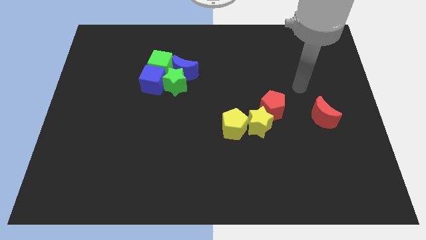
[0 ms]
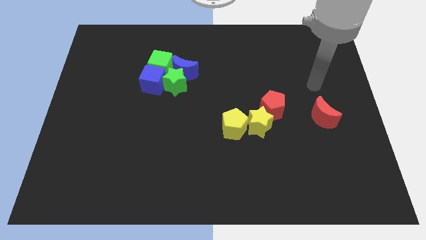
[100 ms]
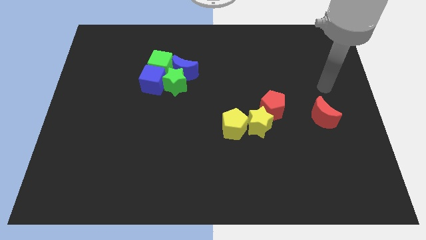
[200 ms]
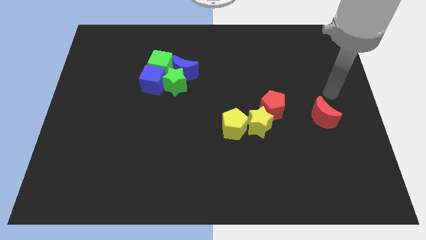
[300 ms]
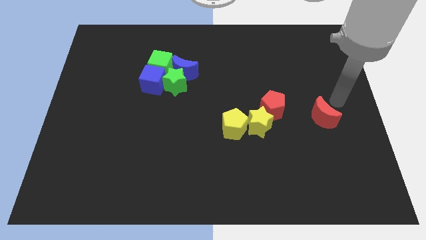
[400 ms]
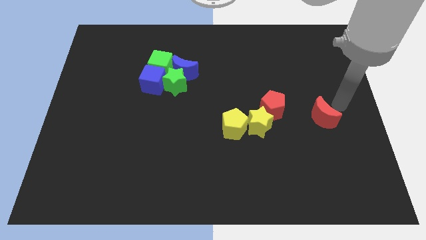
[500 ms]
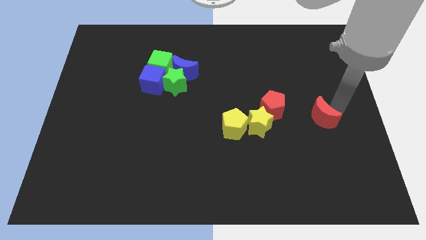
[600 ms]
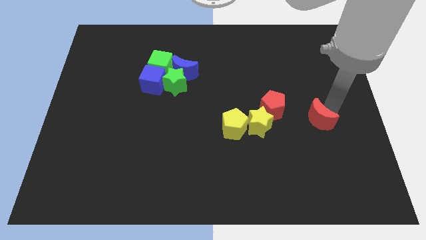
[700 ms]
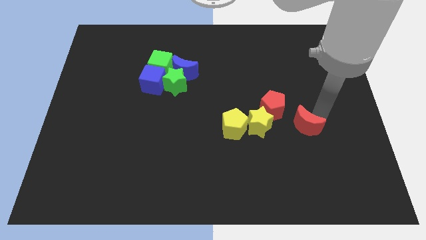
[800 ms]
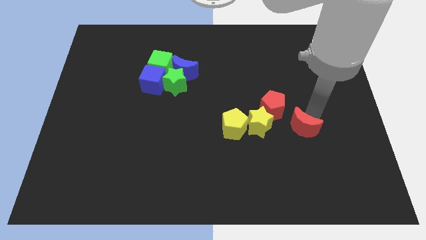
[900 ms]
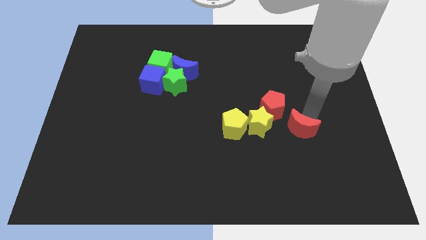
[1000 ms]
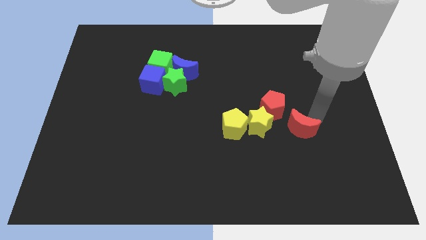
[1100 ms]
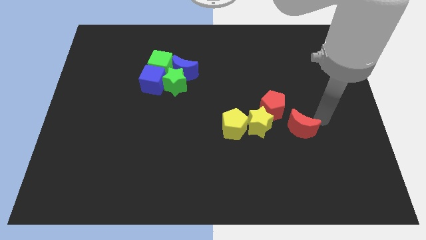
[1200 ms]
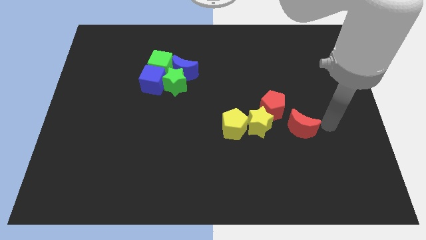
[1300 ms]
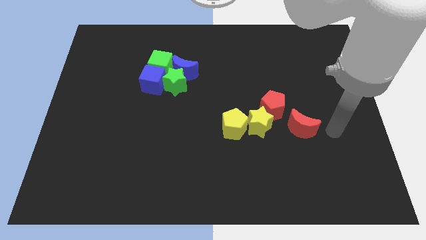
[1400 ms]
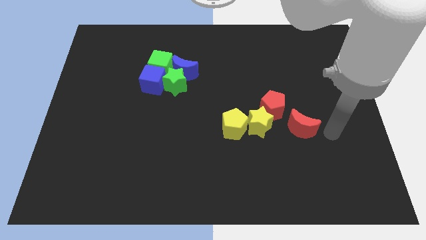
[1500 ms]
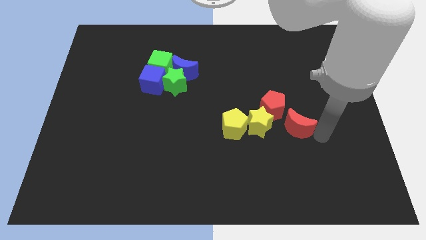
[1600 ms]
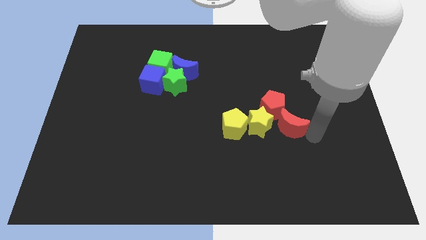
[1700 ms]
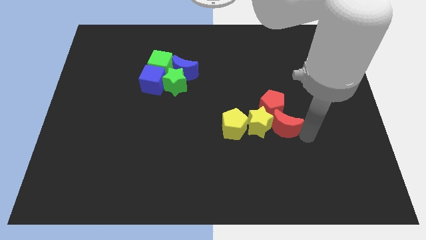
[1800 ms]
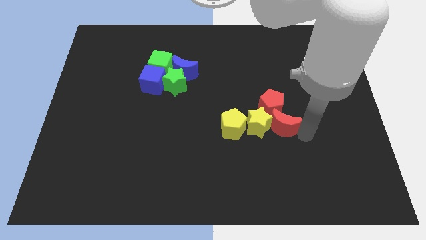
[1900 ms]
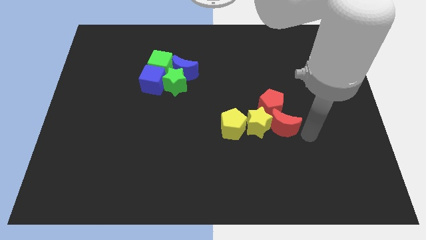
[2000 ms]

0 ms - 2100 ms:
place red moon below red pentagon

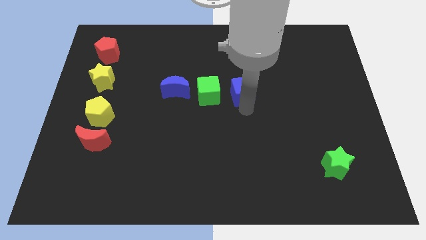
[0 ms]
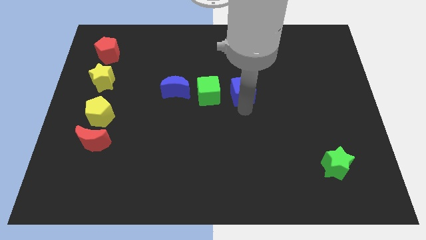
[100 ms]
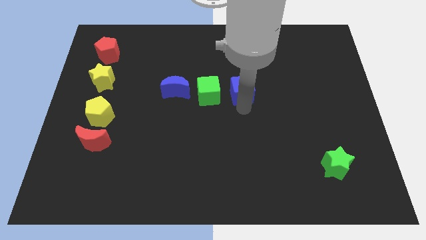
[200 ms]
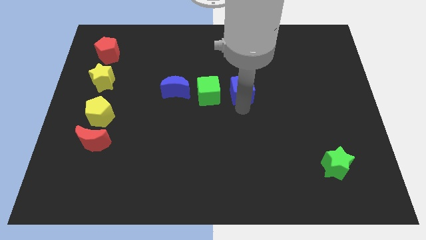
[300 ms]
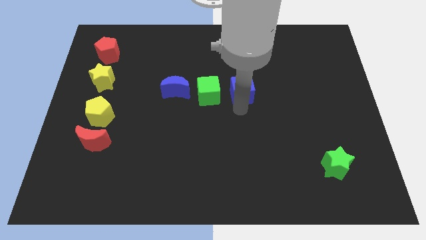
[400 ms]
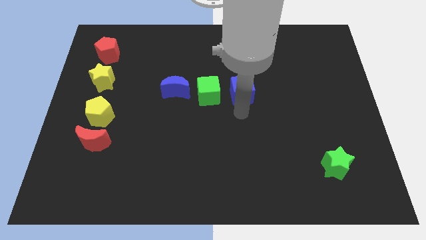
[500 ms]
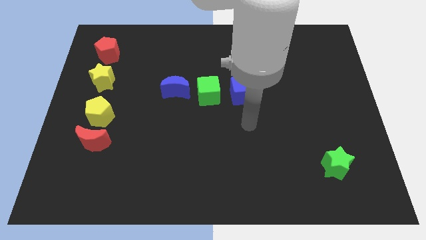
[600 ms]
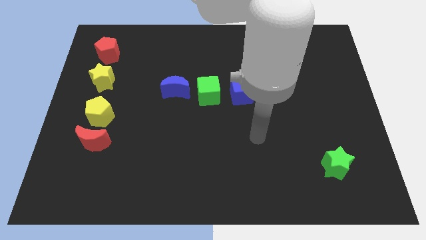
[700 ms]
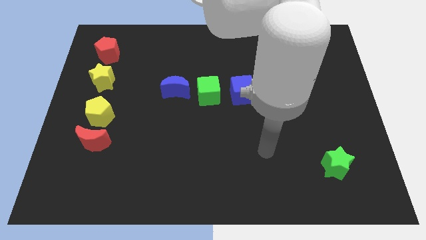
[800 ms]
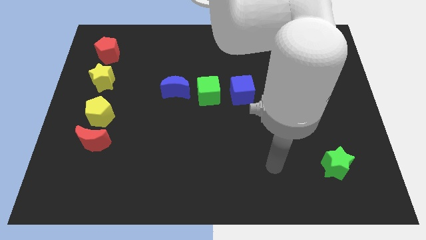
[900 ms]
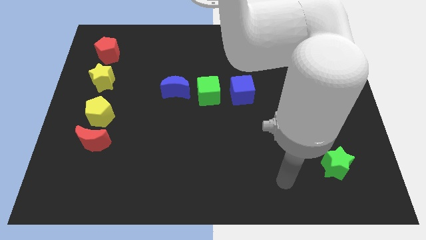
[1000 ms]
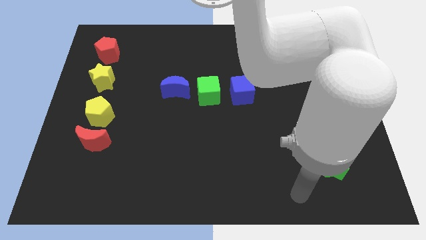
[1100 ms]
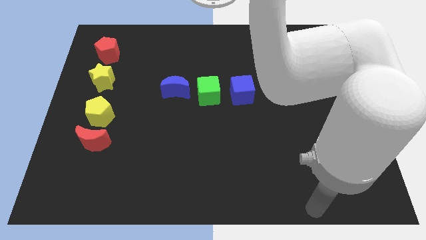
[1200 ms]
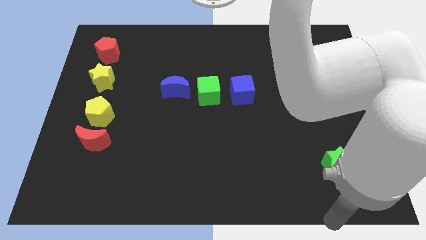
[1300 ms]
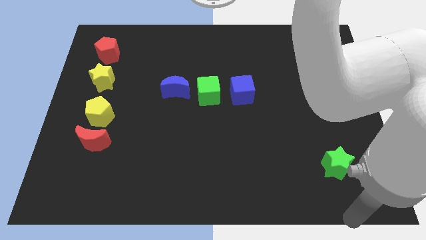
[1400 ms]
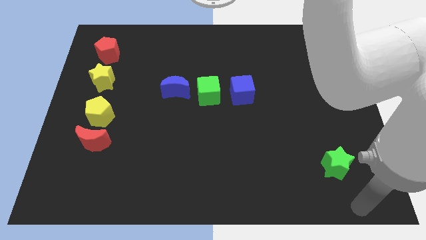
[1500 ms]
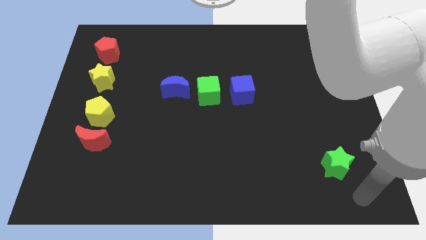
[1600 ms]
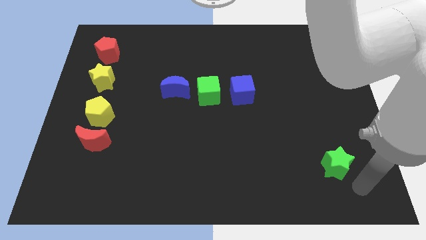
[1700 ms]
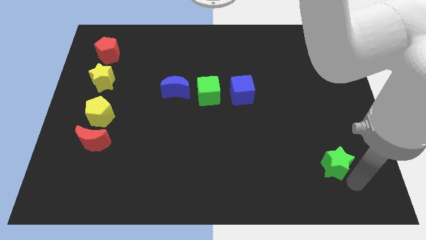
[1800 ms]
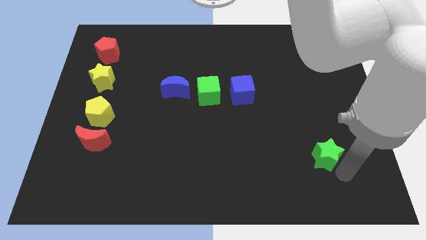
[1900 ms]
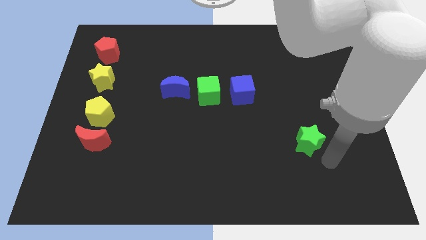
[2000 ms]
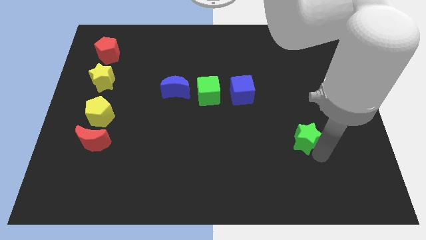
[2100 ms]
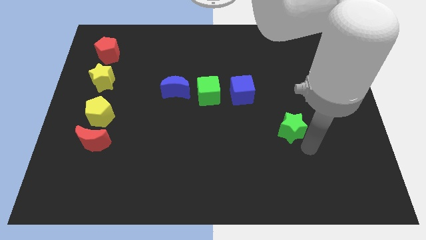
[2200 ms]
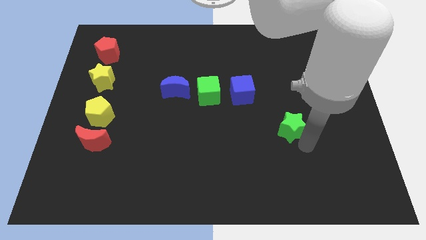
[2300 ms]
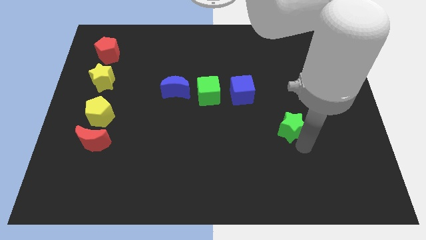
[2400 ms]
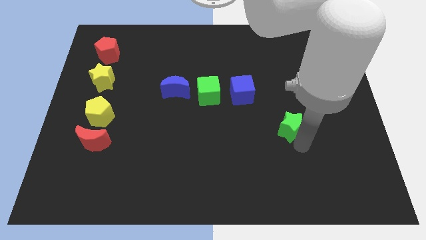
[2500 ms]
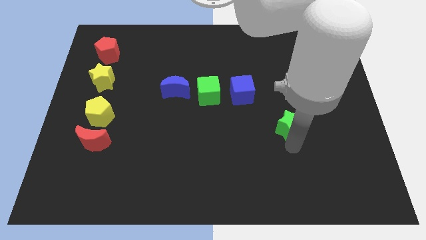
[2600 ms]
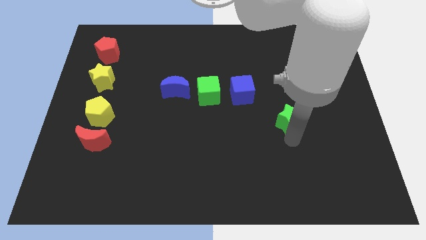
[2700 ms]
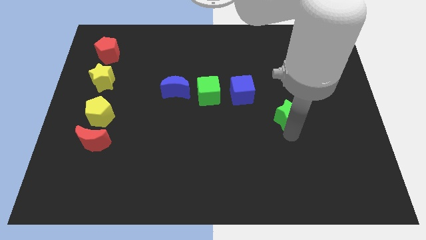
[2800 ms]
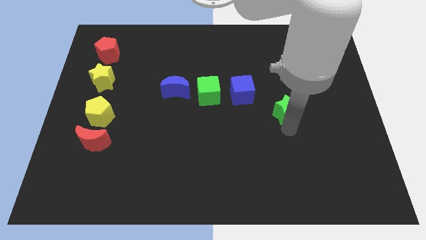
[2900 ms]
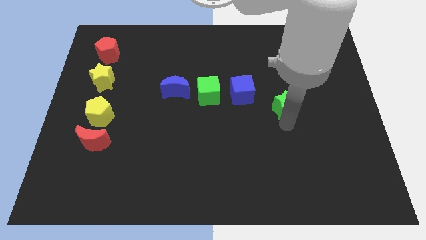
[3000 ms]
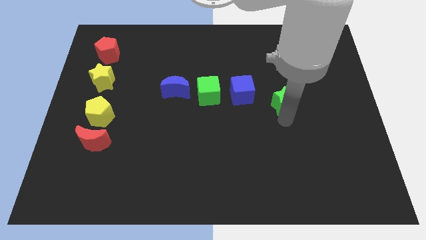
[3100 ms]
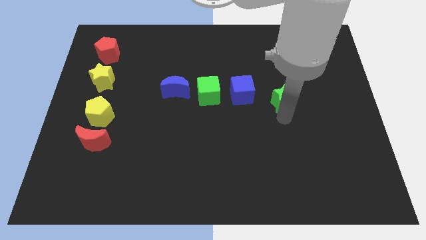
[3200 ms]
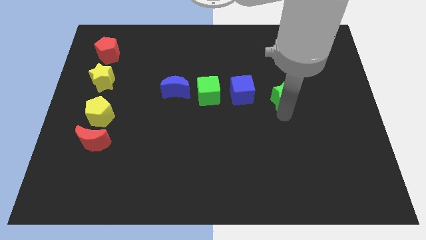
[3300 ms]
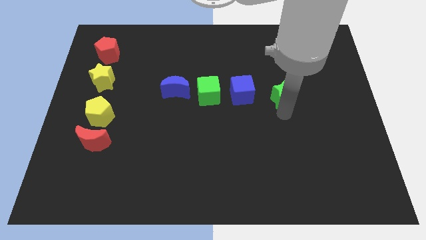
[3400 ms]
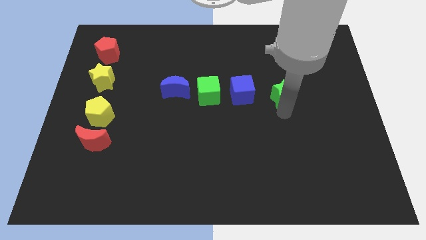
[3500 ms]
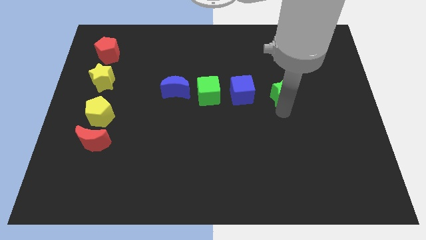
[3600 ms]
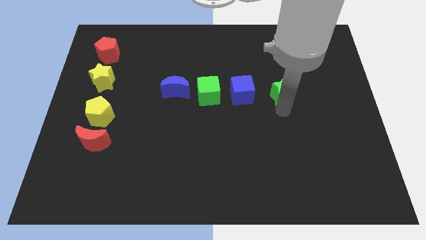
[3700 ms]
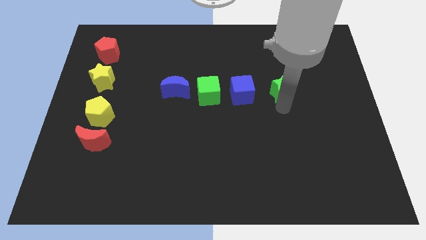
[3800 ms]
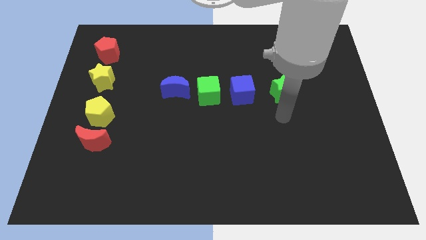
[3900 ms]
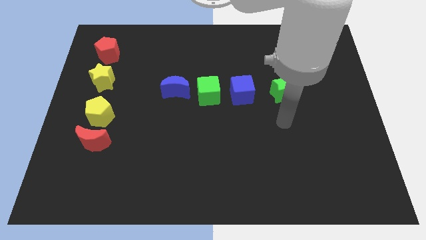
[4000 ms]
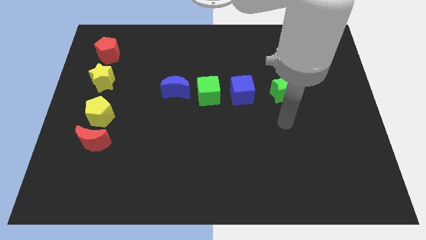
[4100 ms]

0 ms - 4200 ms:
push green star to the right center

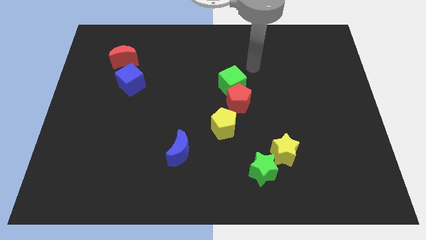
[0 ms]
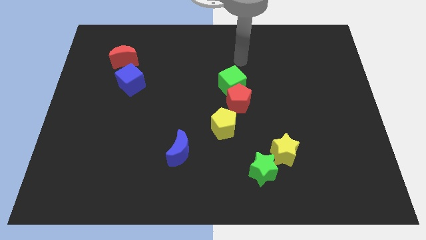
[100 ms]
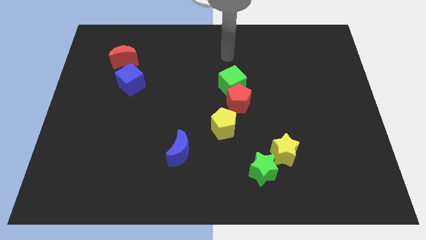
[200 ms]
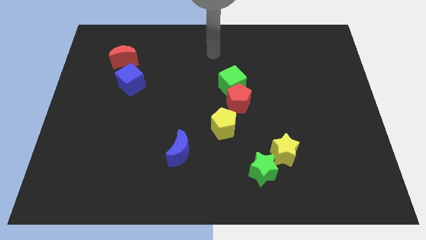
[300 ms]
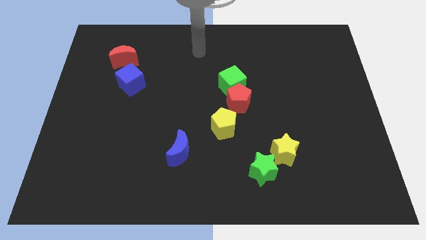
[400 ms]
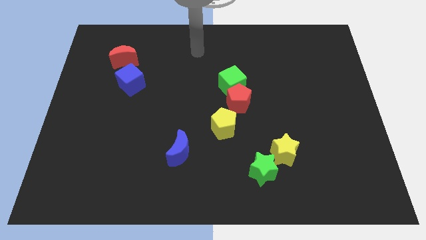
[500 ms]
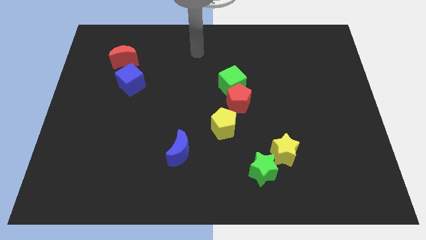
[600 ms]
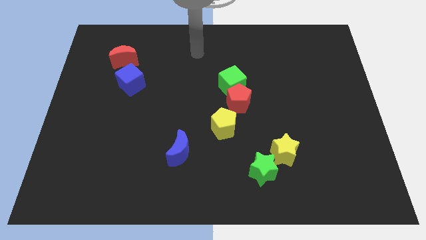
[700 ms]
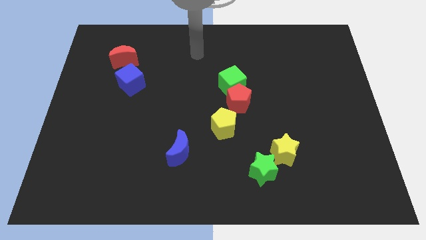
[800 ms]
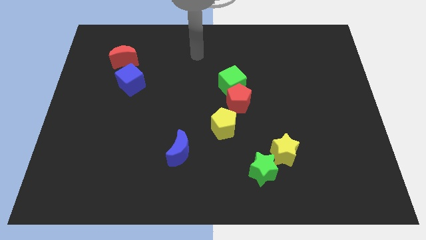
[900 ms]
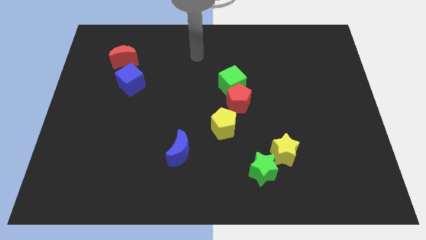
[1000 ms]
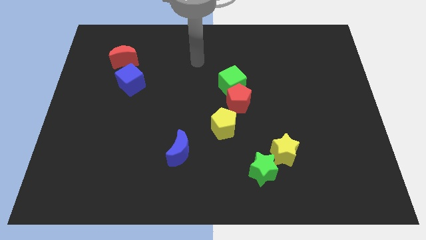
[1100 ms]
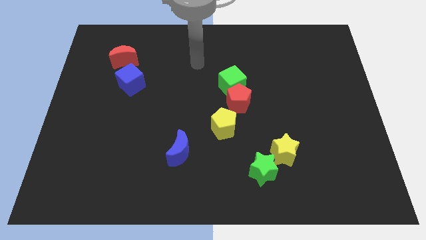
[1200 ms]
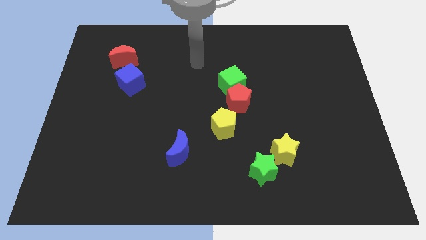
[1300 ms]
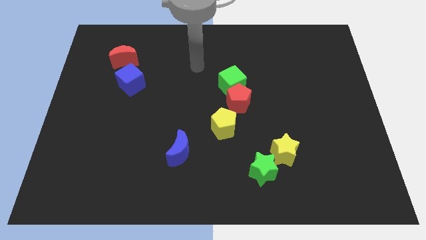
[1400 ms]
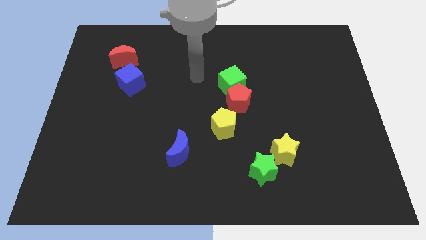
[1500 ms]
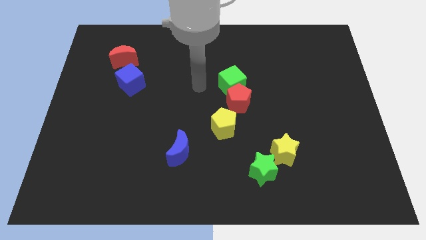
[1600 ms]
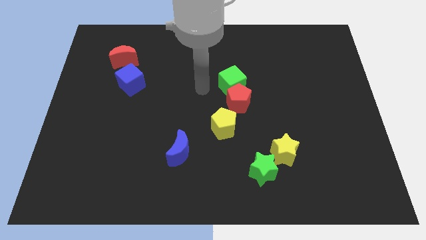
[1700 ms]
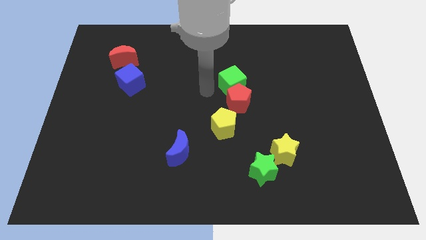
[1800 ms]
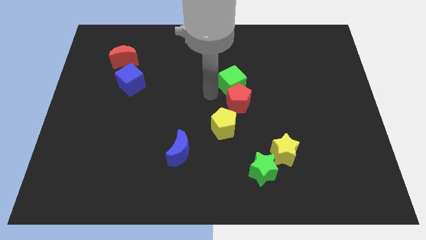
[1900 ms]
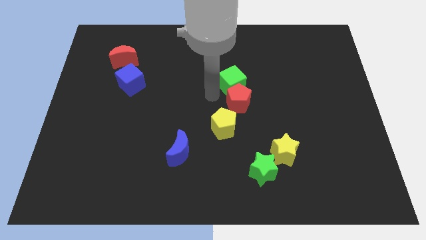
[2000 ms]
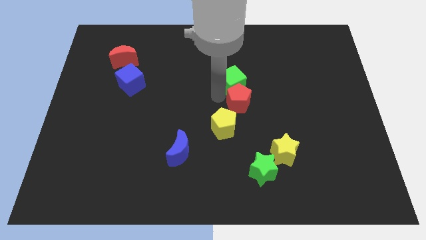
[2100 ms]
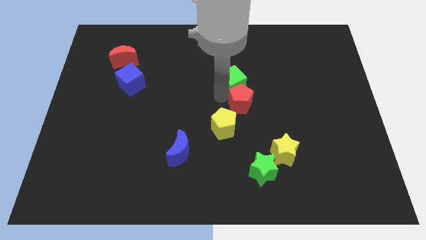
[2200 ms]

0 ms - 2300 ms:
place your hand below the green cube

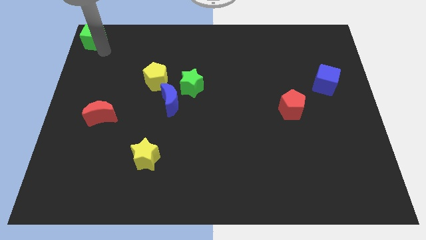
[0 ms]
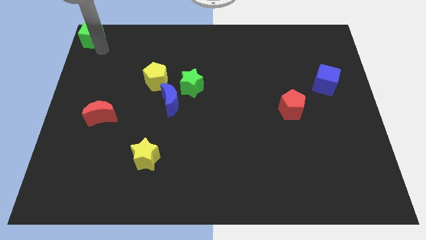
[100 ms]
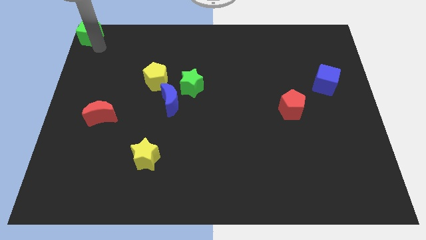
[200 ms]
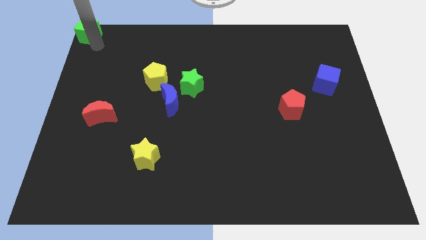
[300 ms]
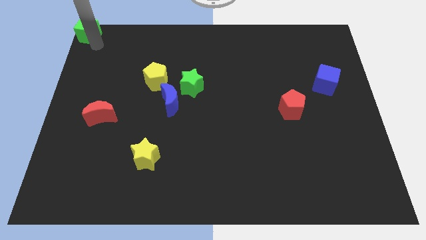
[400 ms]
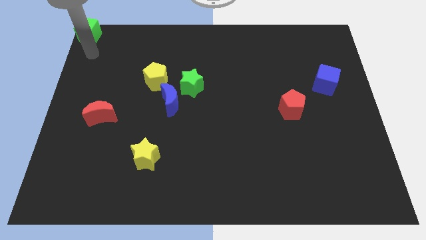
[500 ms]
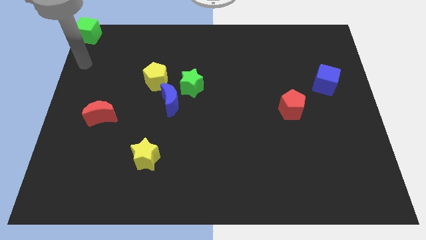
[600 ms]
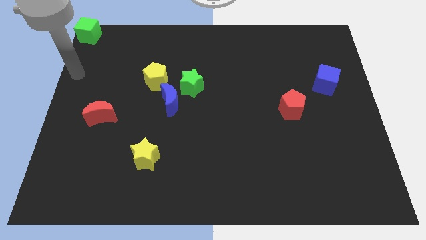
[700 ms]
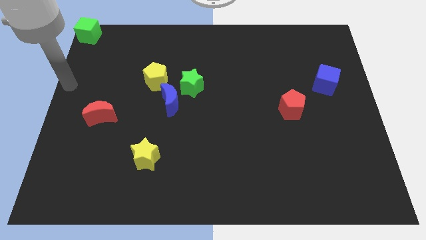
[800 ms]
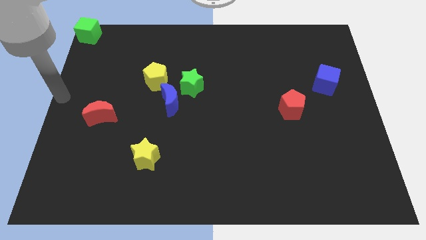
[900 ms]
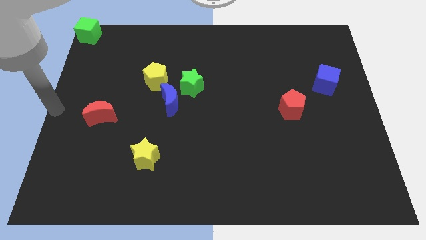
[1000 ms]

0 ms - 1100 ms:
slightly push the green cube to the top left corner
